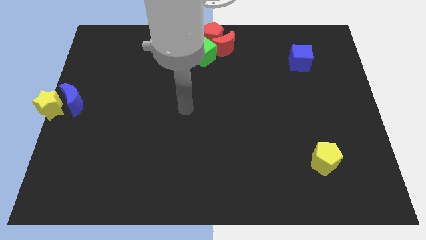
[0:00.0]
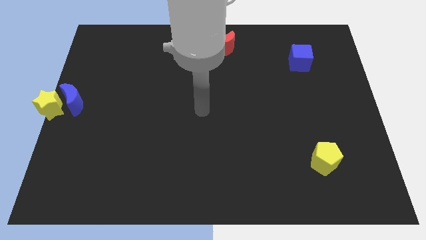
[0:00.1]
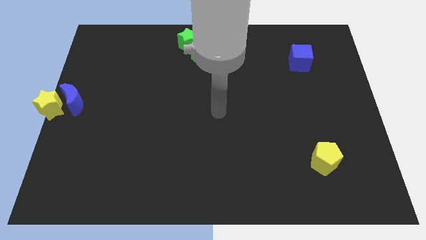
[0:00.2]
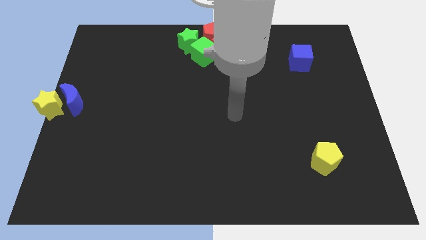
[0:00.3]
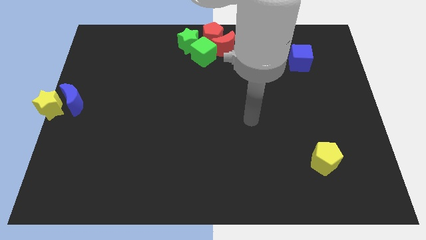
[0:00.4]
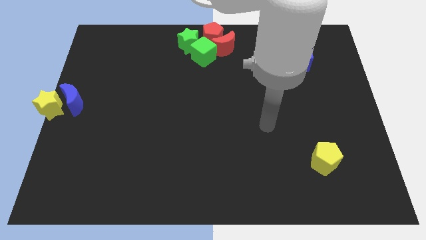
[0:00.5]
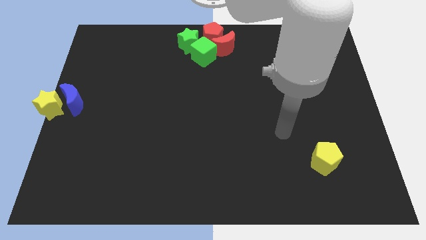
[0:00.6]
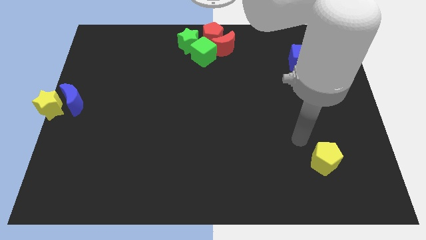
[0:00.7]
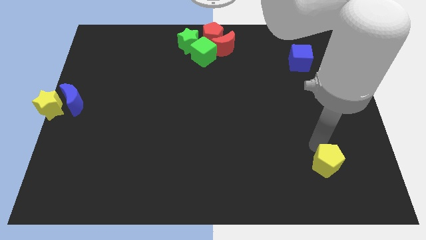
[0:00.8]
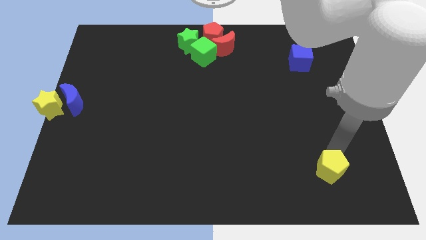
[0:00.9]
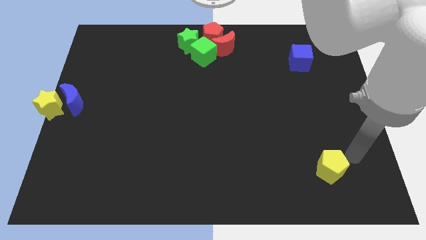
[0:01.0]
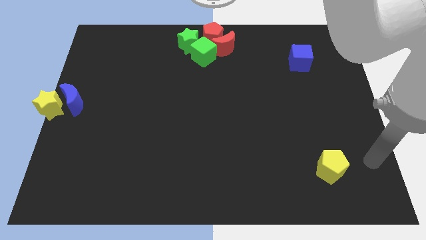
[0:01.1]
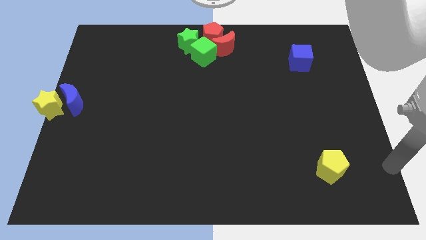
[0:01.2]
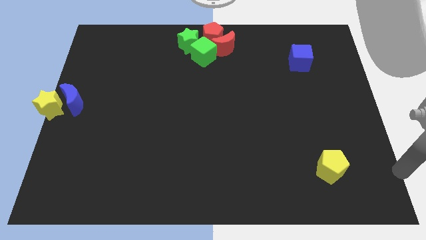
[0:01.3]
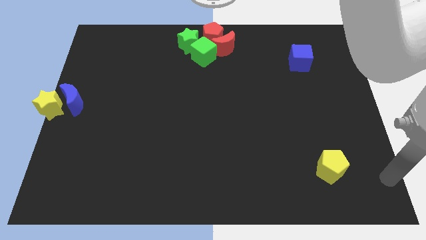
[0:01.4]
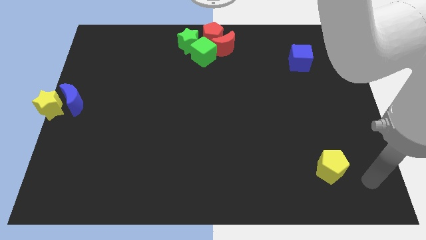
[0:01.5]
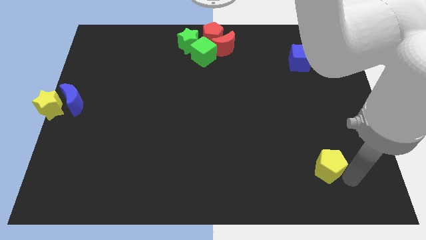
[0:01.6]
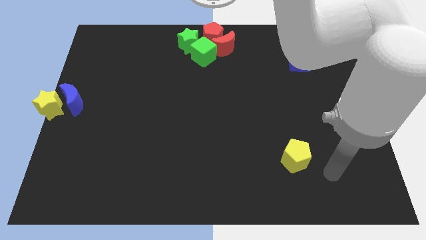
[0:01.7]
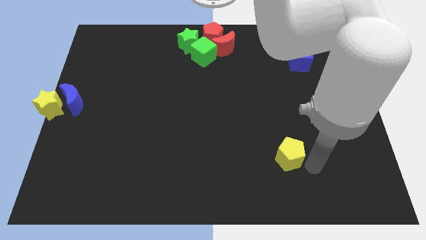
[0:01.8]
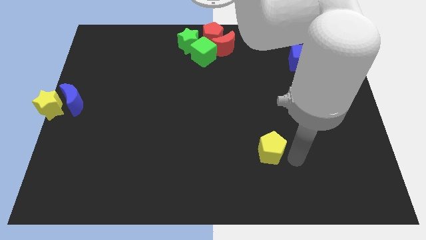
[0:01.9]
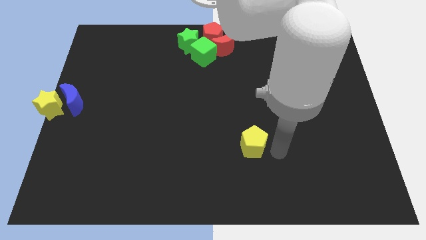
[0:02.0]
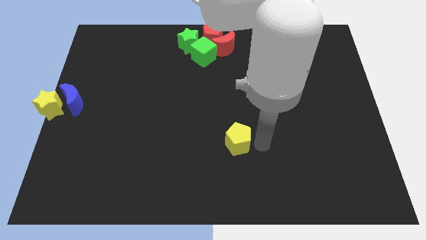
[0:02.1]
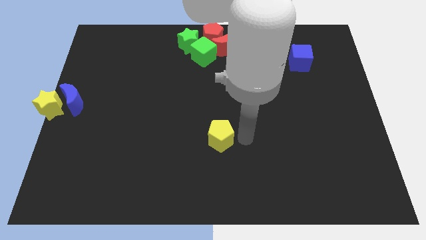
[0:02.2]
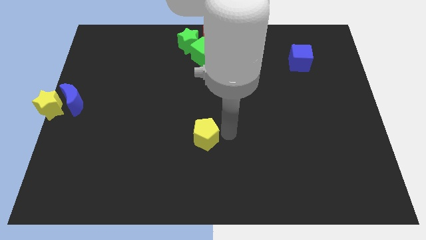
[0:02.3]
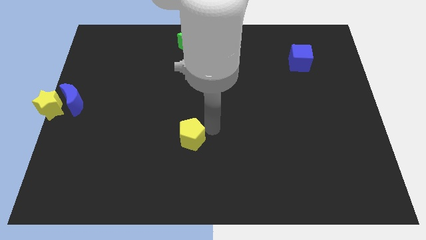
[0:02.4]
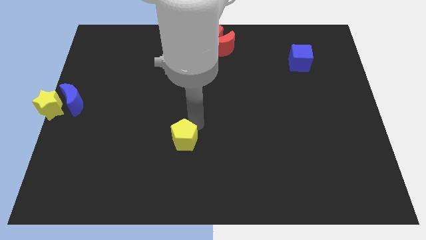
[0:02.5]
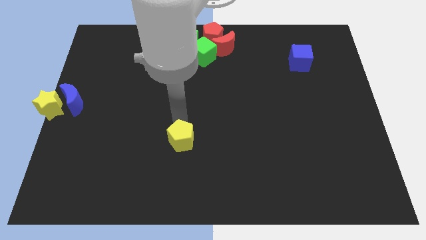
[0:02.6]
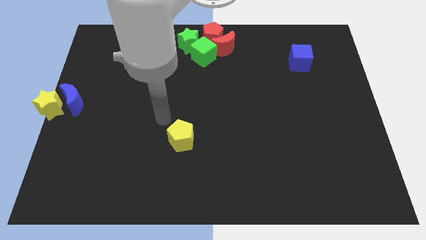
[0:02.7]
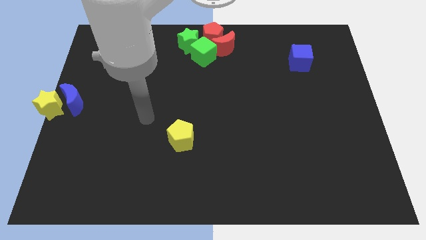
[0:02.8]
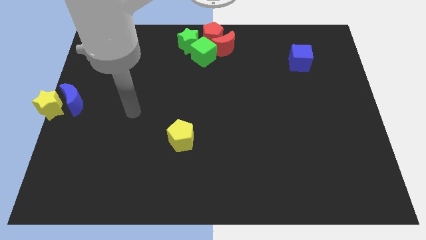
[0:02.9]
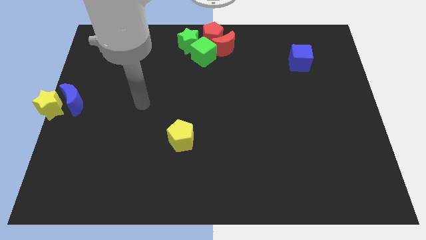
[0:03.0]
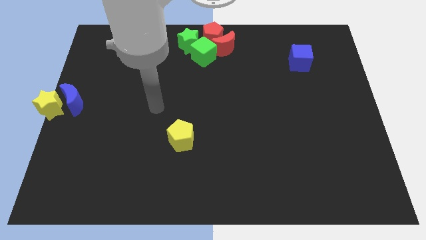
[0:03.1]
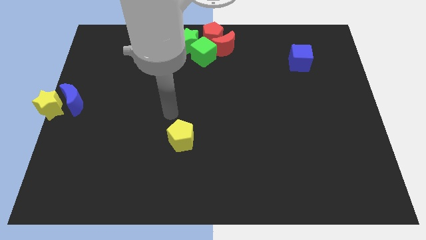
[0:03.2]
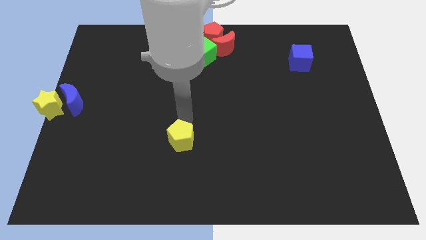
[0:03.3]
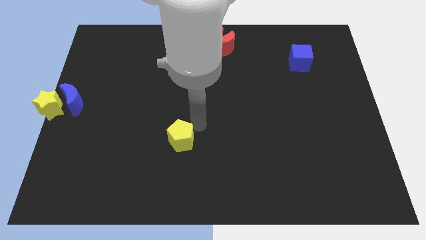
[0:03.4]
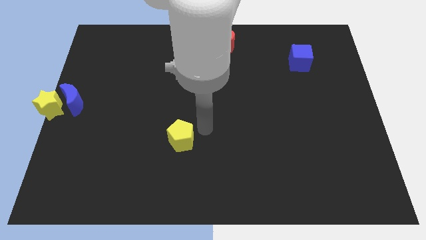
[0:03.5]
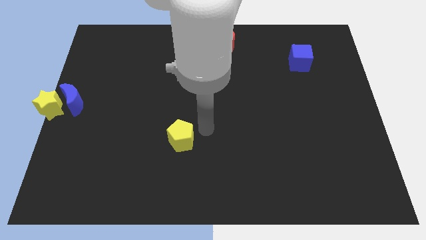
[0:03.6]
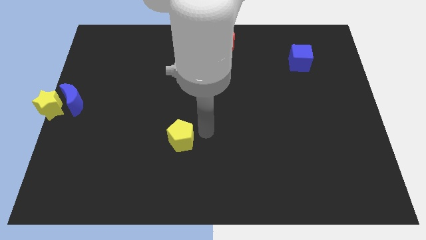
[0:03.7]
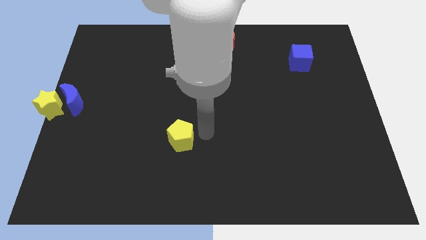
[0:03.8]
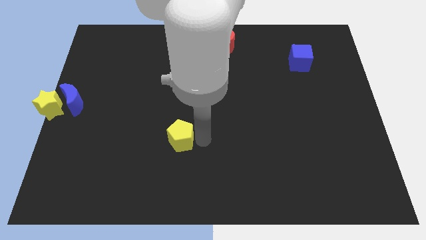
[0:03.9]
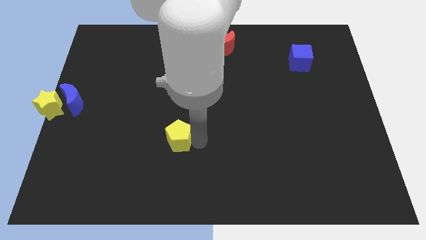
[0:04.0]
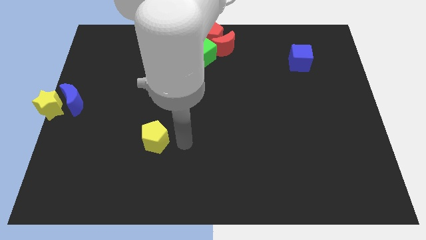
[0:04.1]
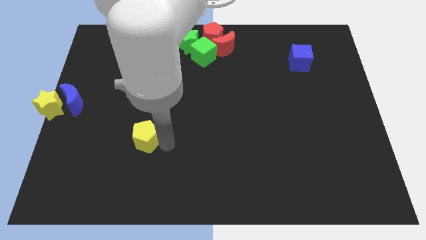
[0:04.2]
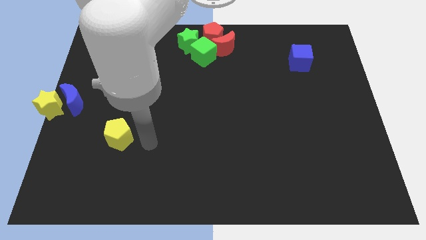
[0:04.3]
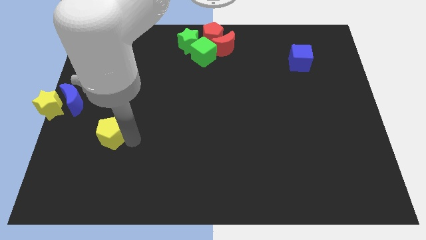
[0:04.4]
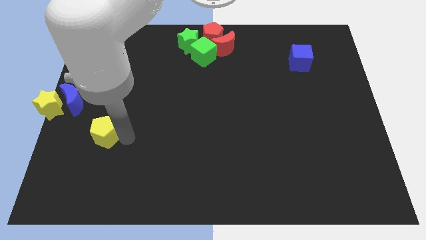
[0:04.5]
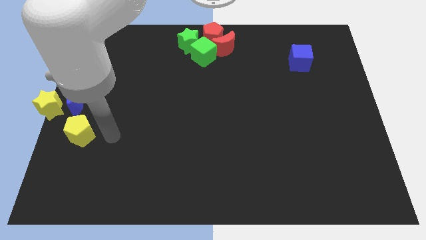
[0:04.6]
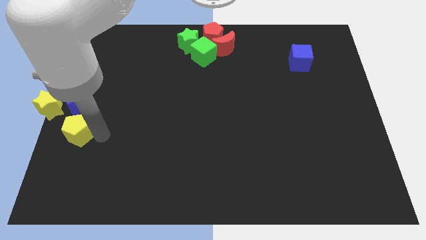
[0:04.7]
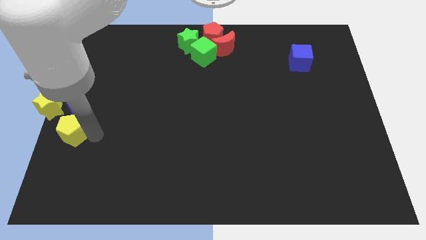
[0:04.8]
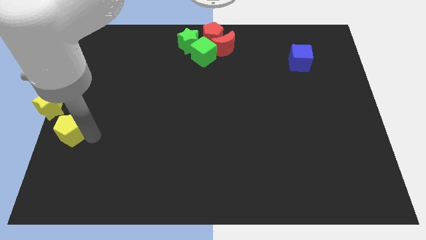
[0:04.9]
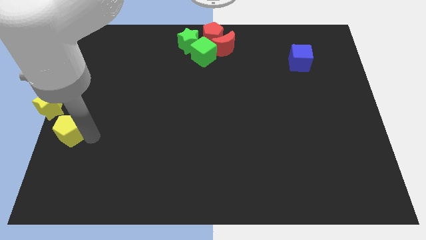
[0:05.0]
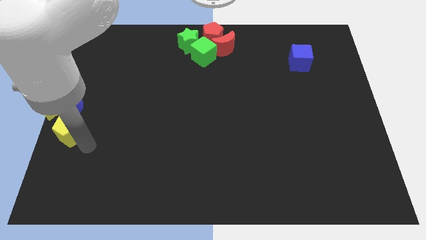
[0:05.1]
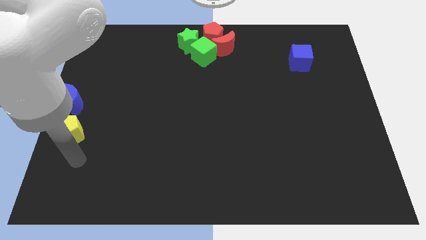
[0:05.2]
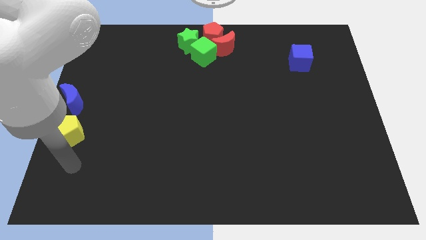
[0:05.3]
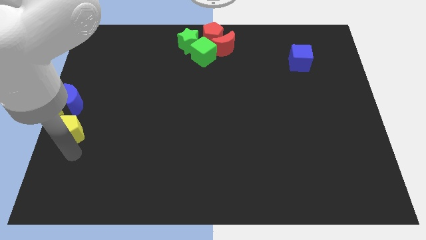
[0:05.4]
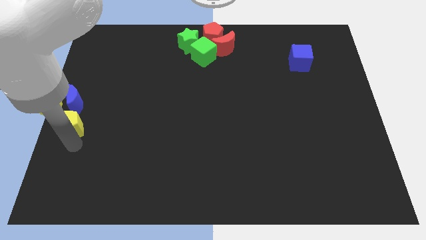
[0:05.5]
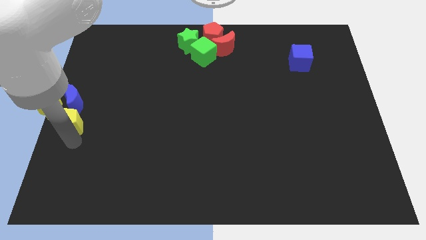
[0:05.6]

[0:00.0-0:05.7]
move yellow pentagon below the blue moon

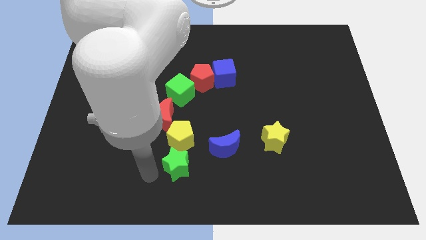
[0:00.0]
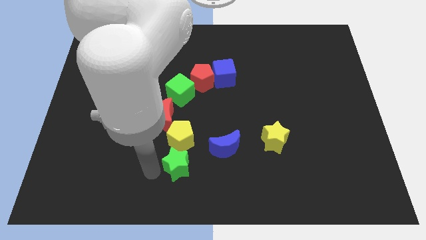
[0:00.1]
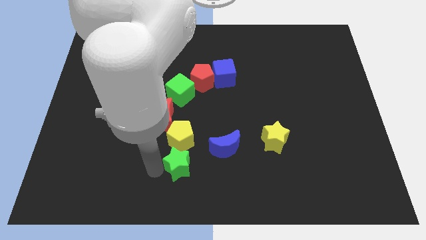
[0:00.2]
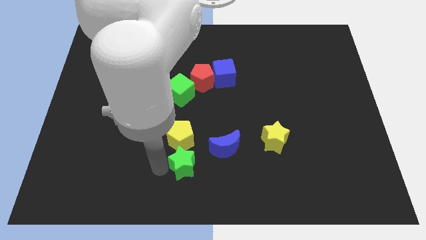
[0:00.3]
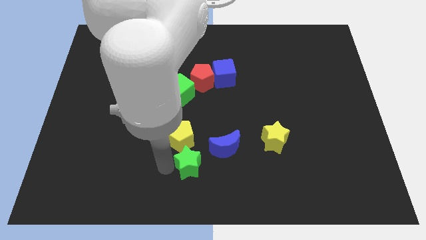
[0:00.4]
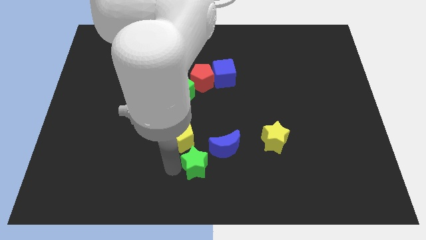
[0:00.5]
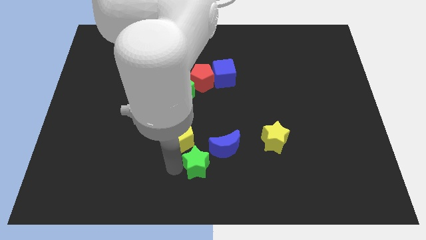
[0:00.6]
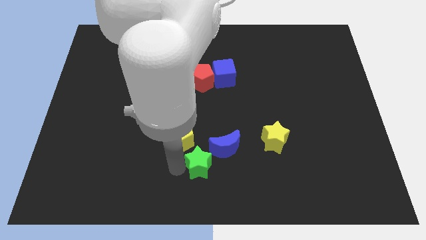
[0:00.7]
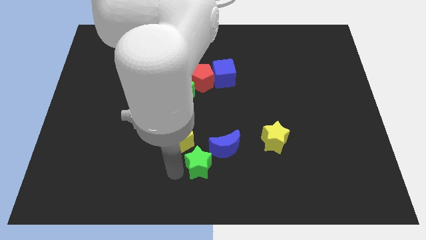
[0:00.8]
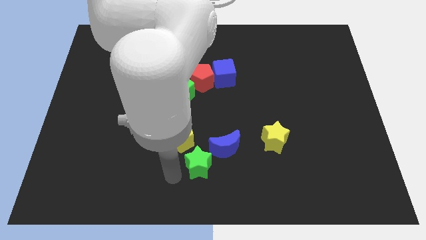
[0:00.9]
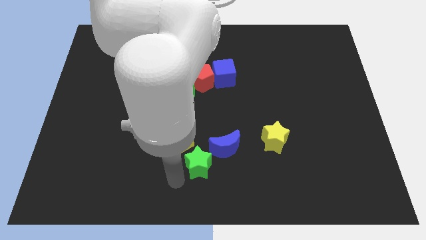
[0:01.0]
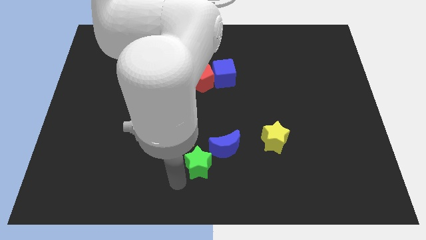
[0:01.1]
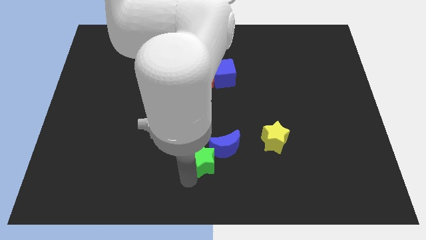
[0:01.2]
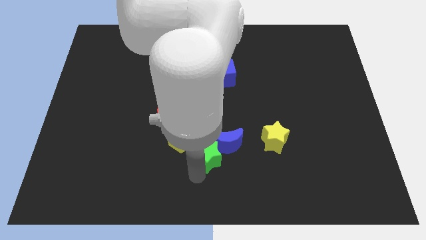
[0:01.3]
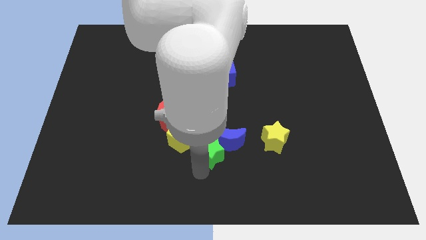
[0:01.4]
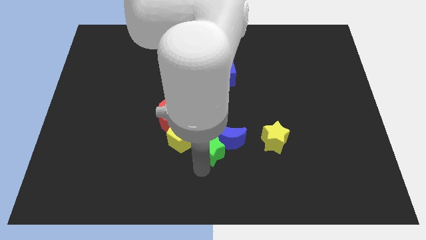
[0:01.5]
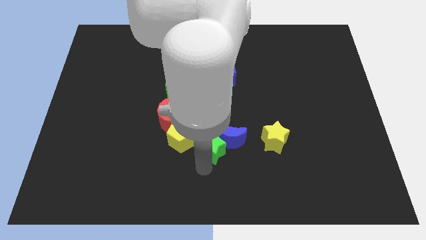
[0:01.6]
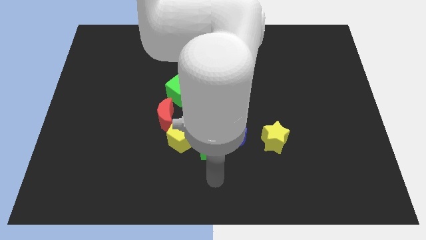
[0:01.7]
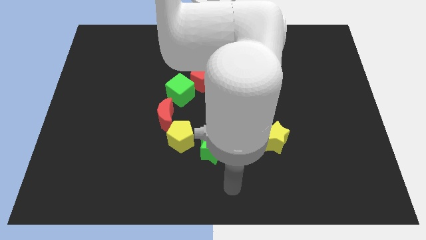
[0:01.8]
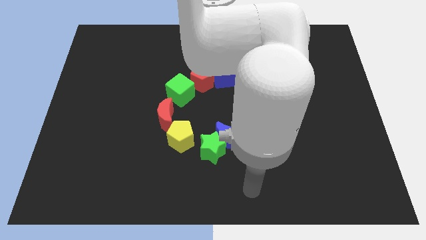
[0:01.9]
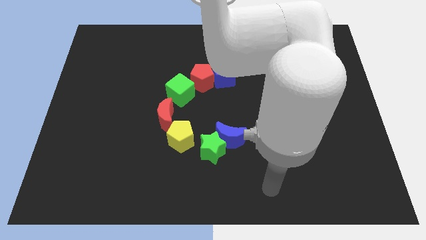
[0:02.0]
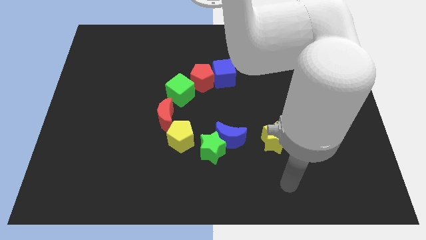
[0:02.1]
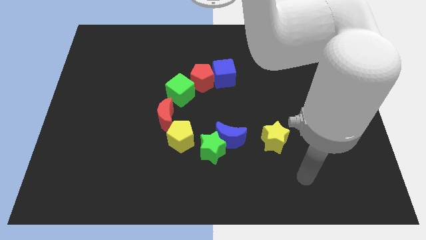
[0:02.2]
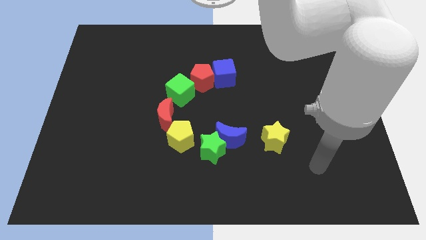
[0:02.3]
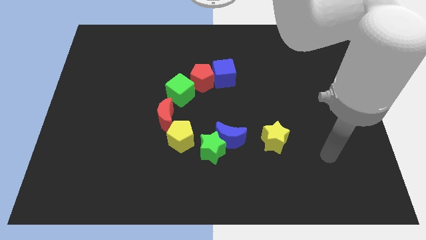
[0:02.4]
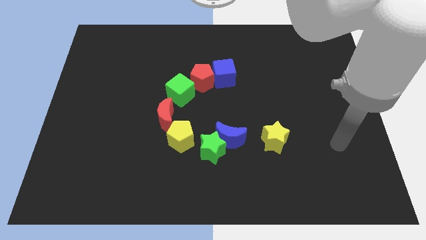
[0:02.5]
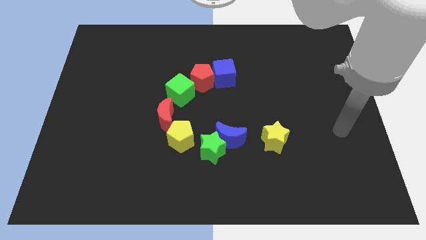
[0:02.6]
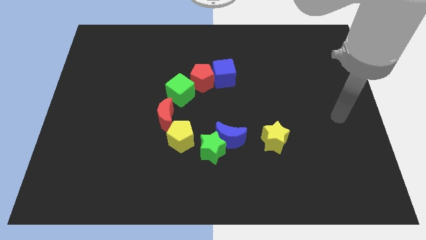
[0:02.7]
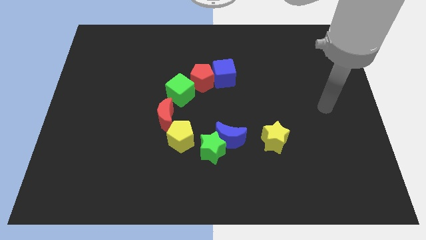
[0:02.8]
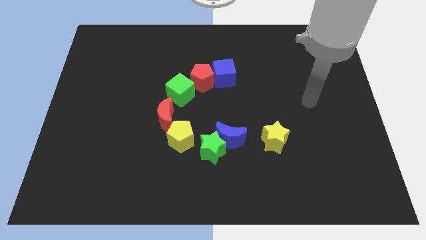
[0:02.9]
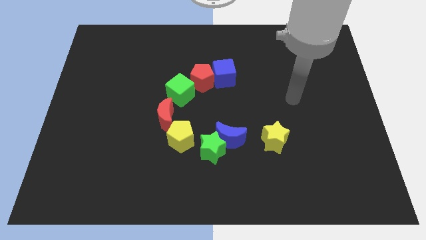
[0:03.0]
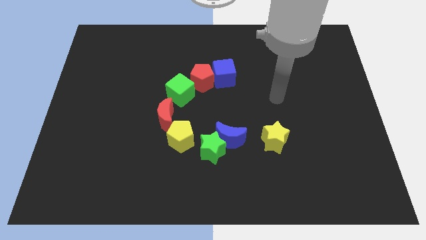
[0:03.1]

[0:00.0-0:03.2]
push the green star into the blue moon
